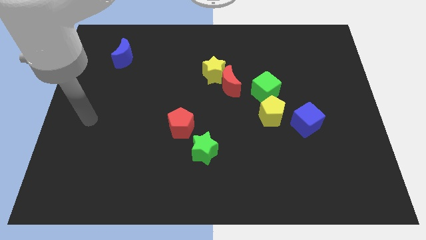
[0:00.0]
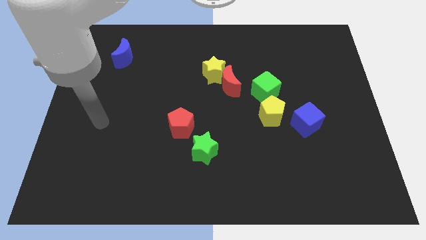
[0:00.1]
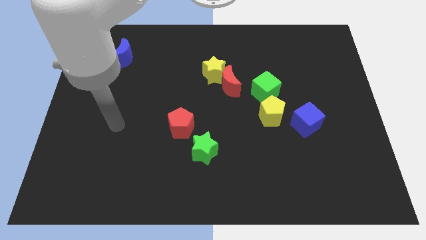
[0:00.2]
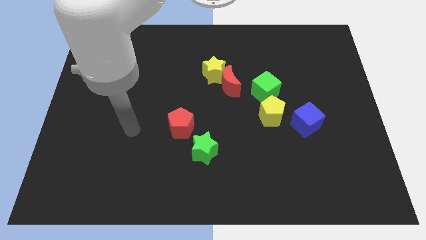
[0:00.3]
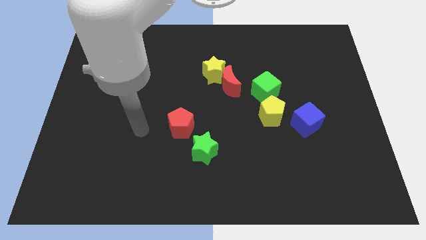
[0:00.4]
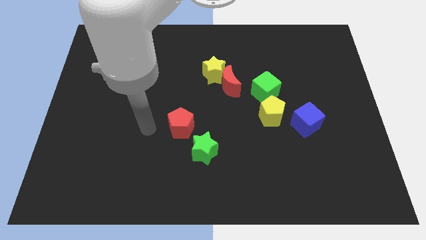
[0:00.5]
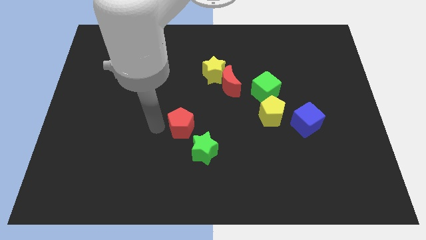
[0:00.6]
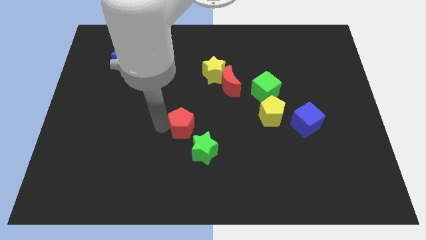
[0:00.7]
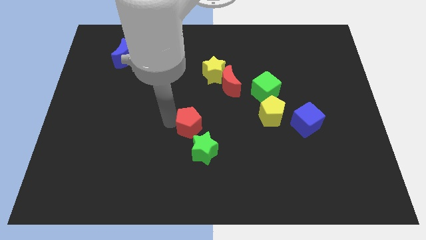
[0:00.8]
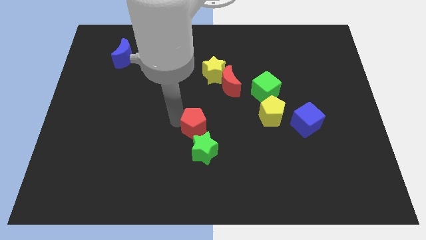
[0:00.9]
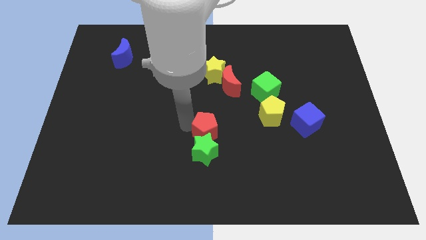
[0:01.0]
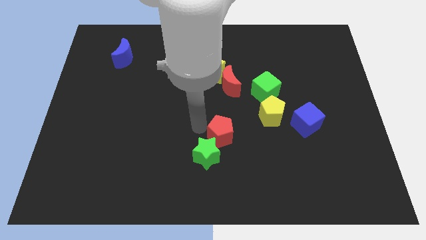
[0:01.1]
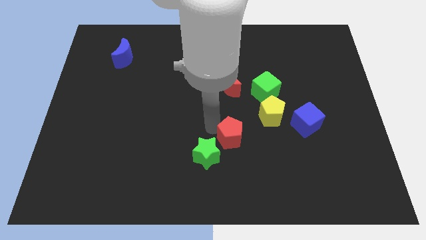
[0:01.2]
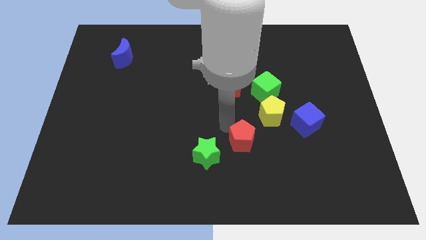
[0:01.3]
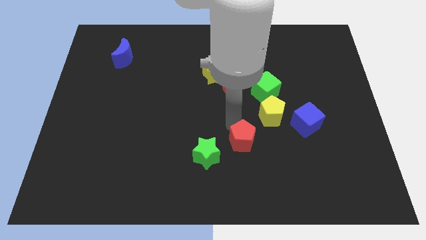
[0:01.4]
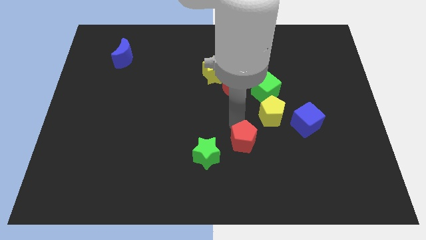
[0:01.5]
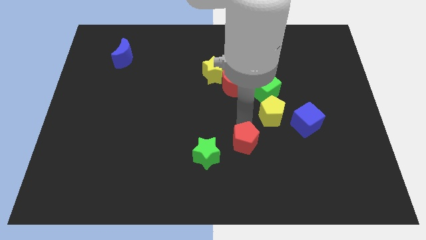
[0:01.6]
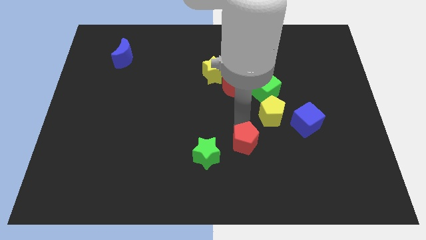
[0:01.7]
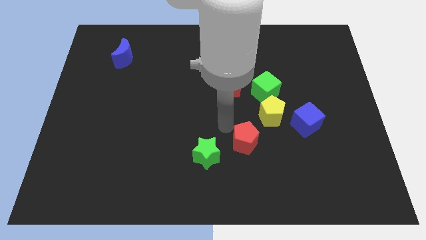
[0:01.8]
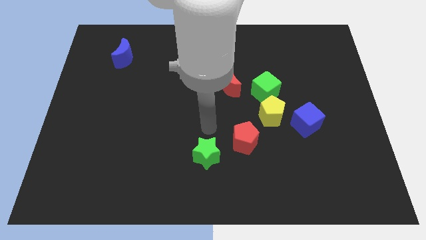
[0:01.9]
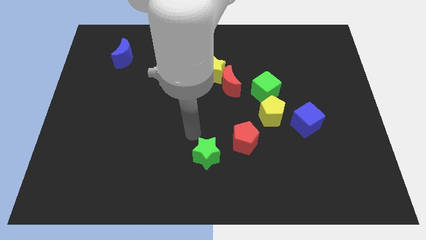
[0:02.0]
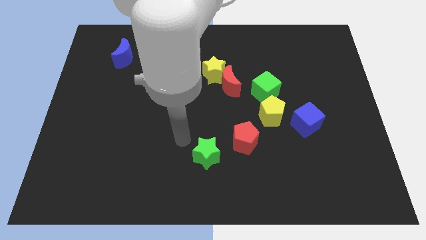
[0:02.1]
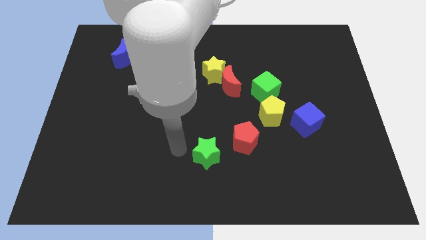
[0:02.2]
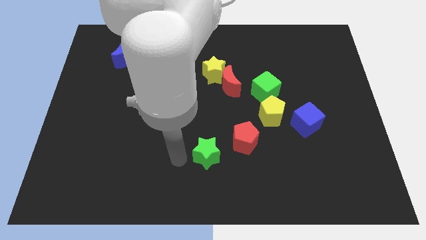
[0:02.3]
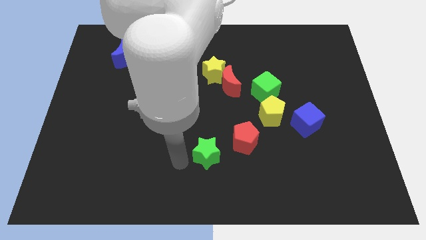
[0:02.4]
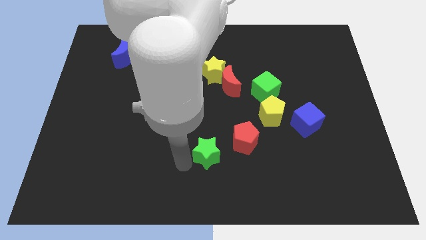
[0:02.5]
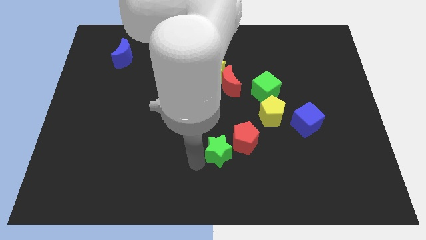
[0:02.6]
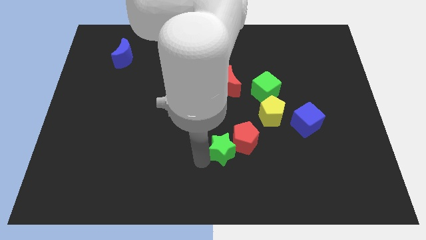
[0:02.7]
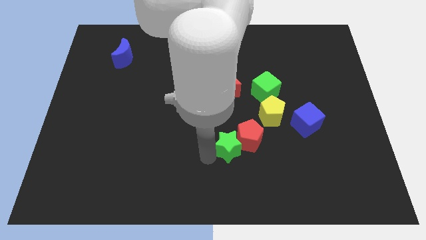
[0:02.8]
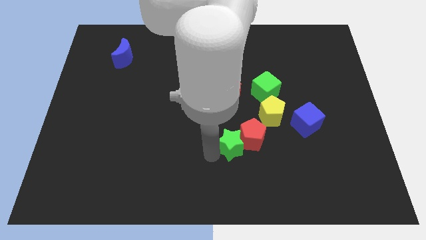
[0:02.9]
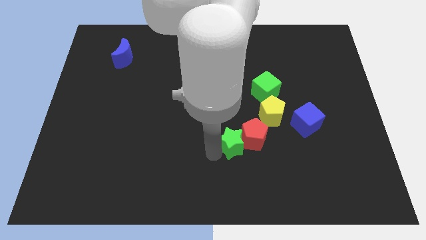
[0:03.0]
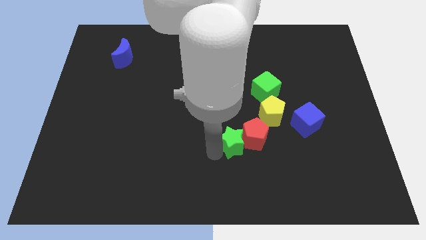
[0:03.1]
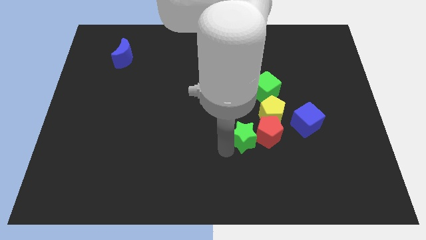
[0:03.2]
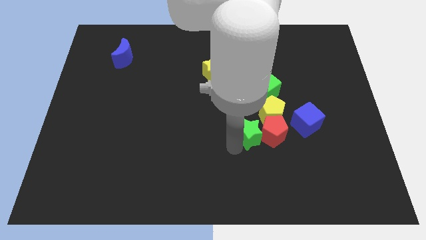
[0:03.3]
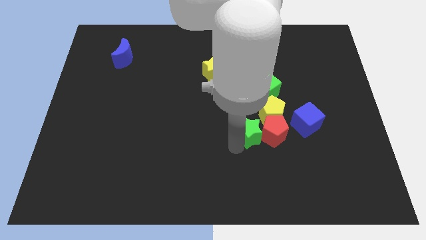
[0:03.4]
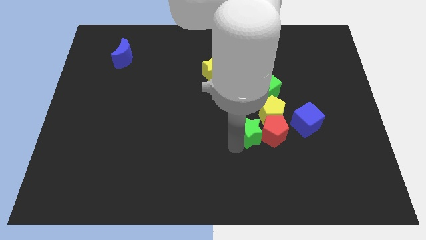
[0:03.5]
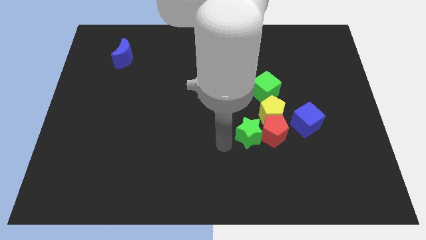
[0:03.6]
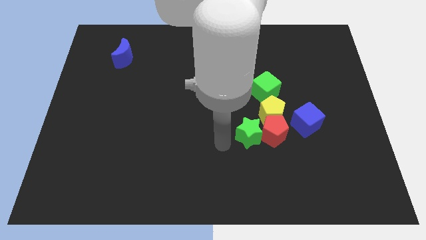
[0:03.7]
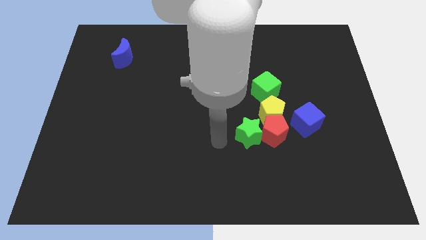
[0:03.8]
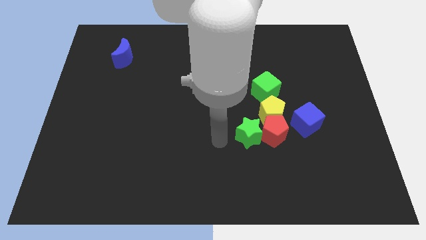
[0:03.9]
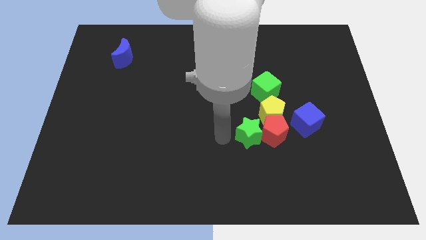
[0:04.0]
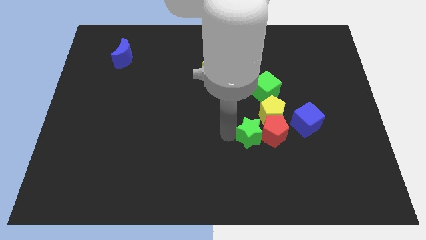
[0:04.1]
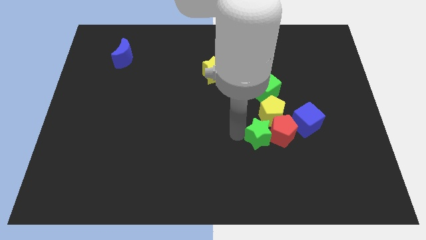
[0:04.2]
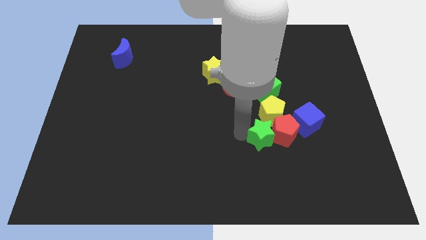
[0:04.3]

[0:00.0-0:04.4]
move the red pentagon and green star to the bottom of the yellow pentagon

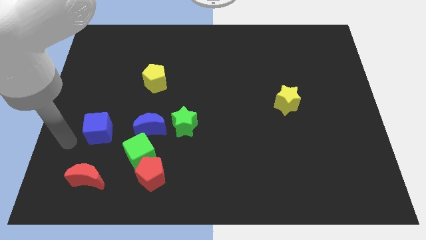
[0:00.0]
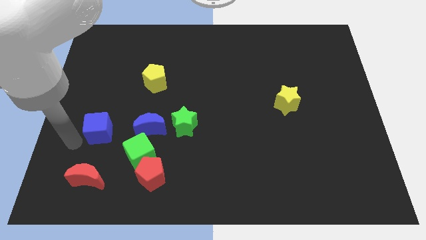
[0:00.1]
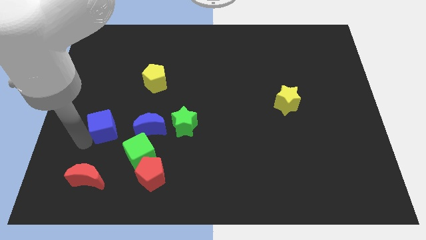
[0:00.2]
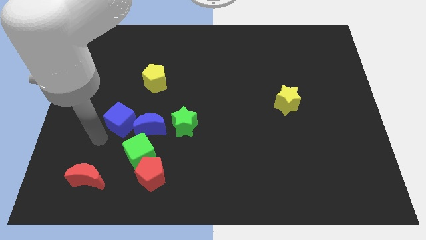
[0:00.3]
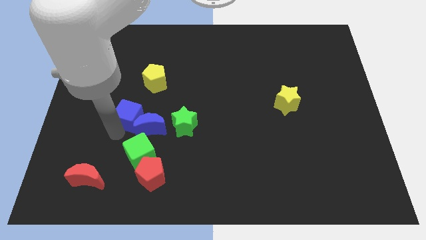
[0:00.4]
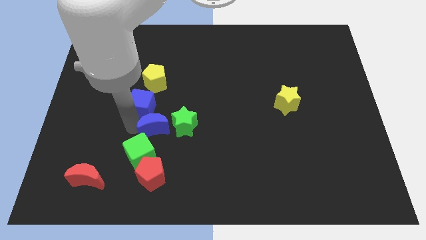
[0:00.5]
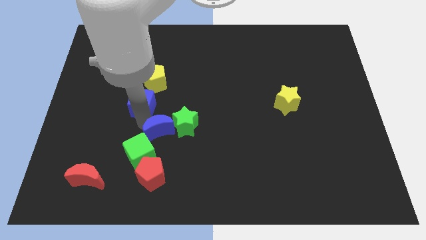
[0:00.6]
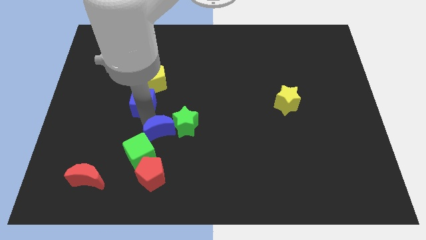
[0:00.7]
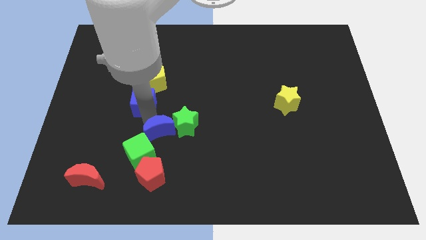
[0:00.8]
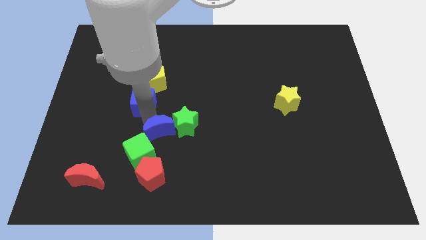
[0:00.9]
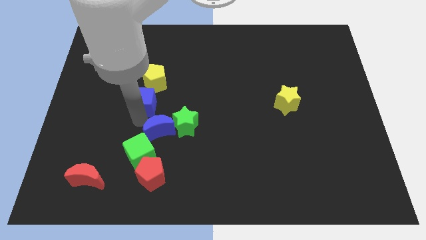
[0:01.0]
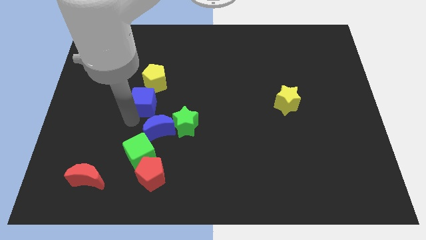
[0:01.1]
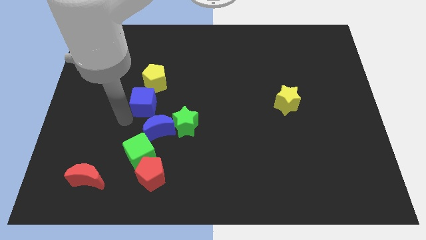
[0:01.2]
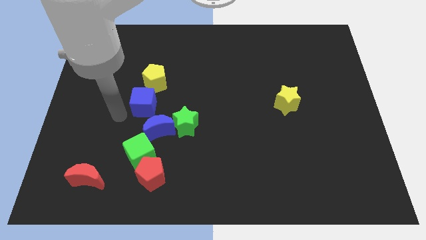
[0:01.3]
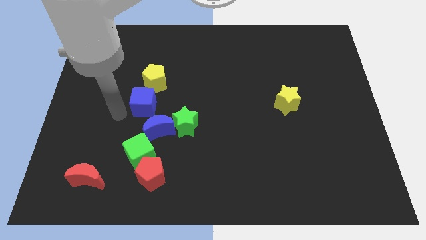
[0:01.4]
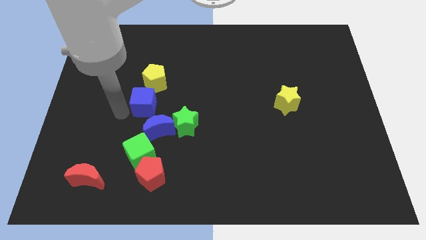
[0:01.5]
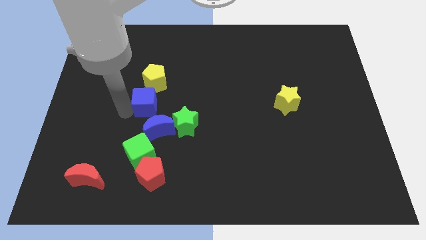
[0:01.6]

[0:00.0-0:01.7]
move blue cube left below the yellow pentagon

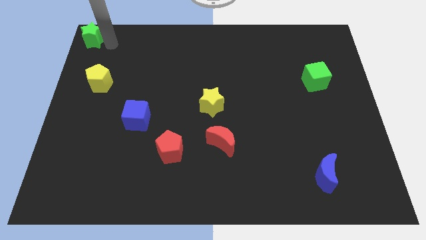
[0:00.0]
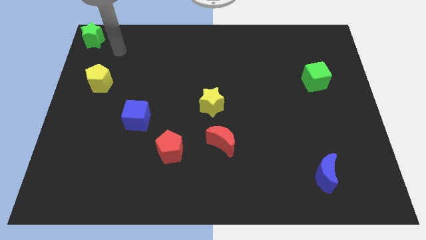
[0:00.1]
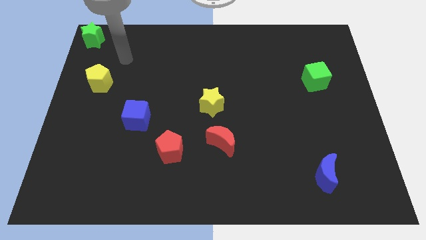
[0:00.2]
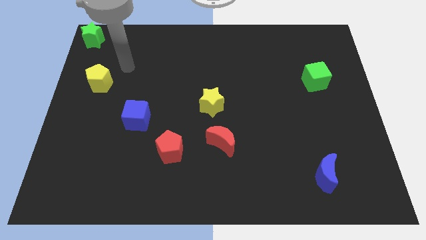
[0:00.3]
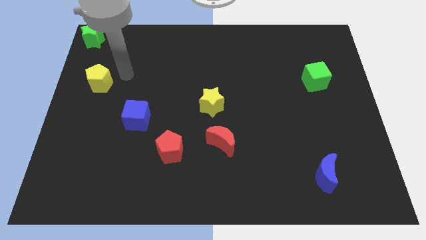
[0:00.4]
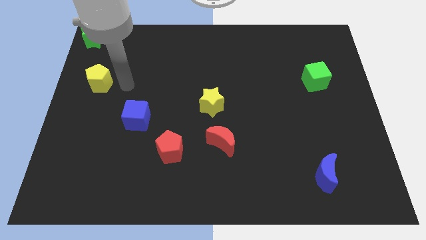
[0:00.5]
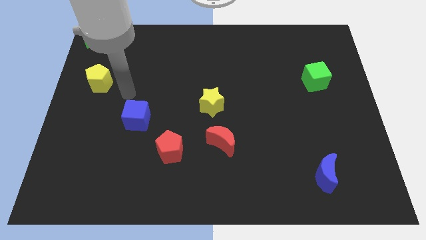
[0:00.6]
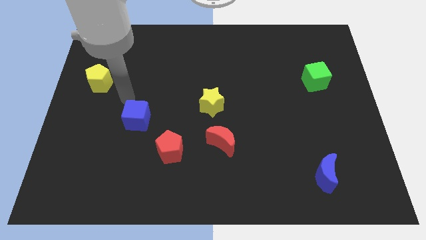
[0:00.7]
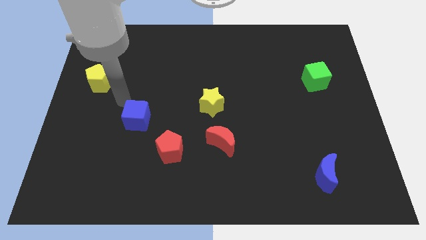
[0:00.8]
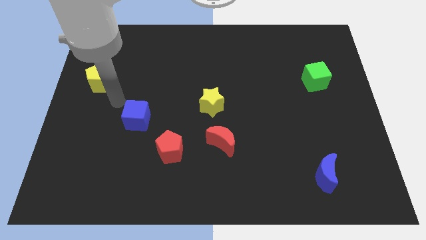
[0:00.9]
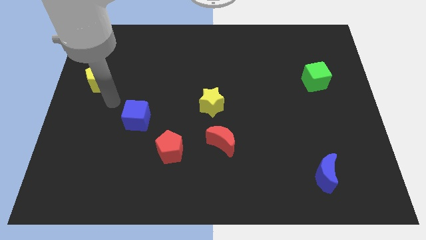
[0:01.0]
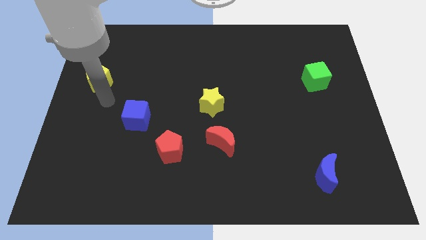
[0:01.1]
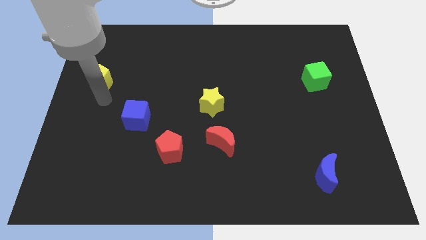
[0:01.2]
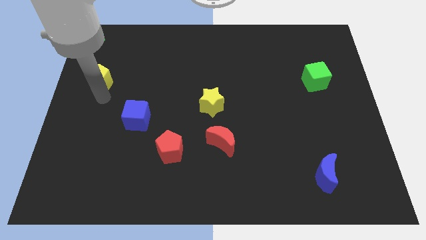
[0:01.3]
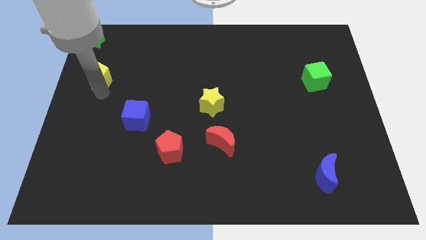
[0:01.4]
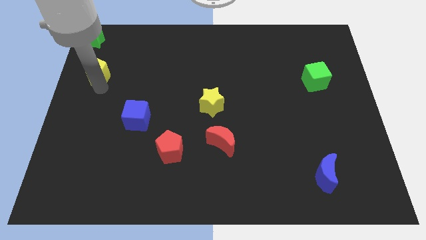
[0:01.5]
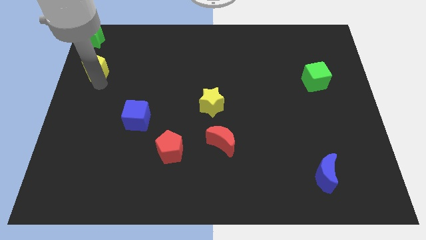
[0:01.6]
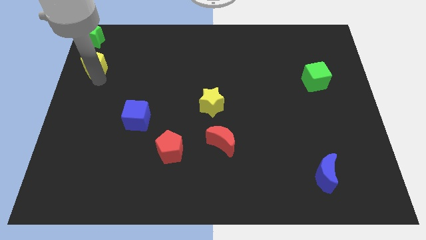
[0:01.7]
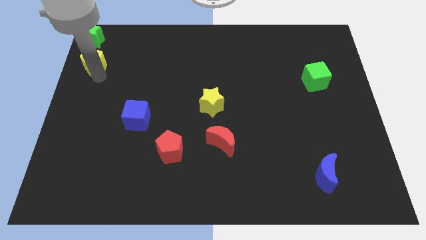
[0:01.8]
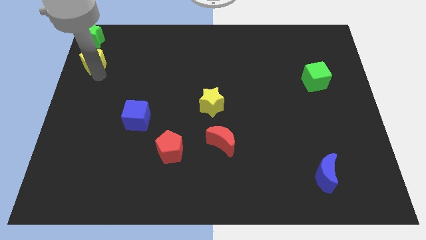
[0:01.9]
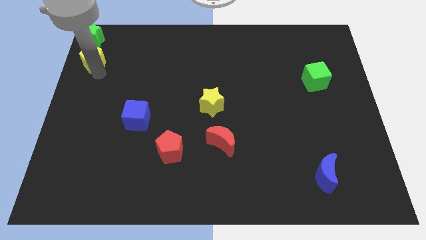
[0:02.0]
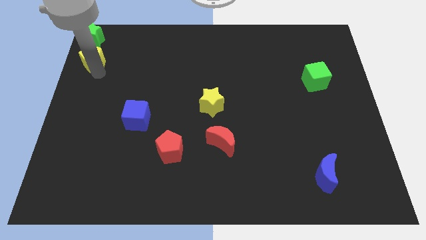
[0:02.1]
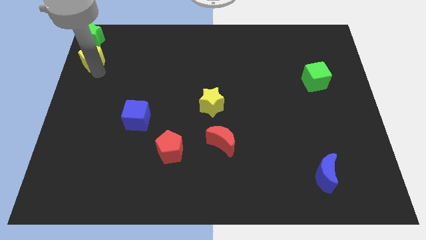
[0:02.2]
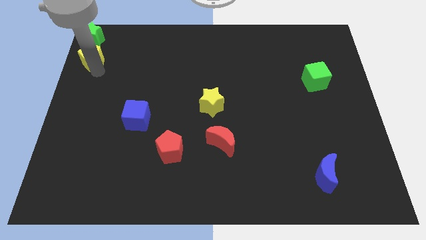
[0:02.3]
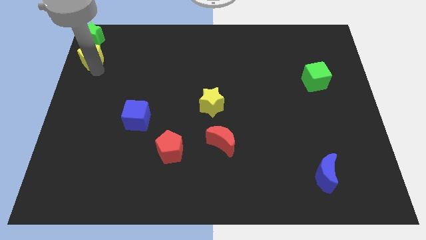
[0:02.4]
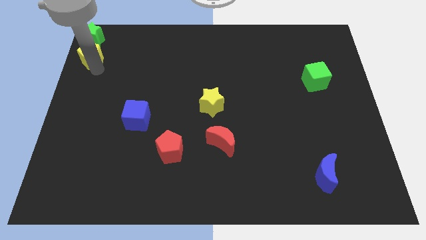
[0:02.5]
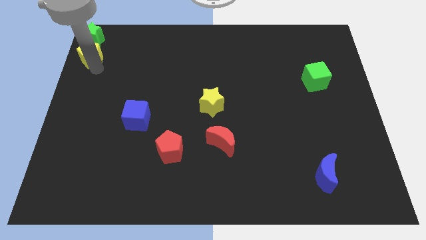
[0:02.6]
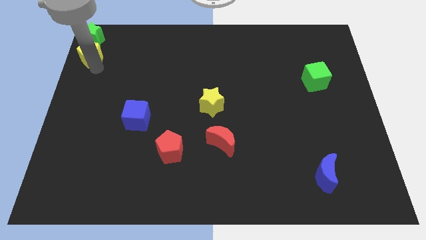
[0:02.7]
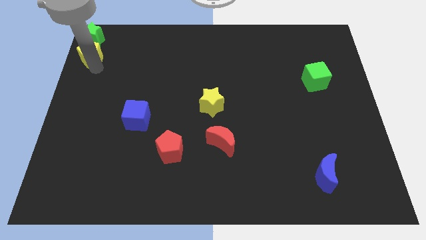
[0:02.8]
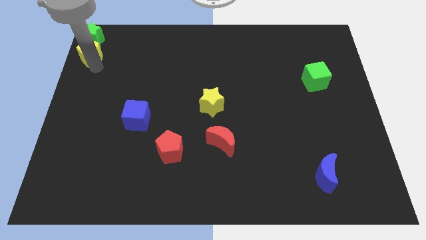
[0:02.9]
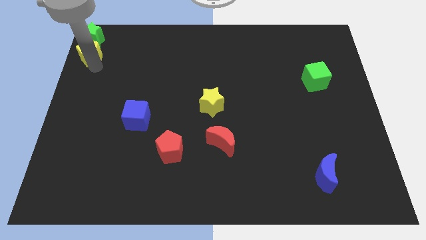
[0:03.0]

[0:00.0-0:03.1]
move yellow pentagon towards green star
